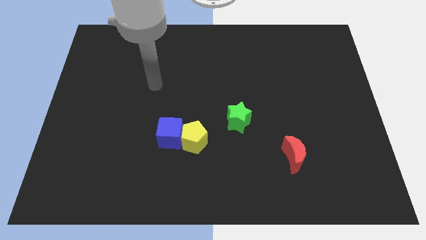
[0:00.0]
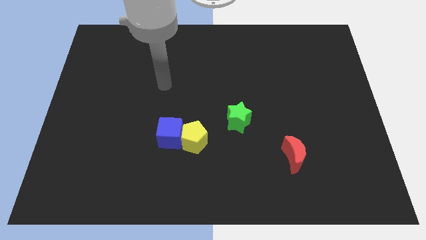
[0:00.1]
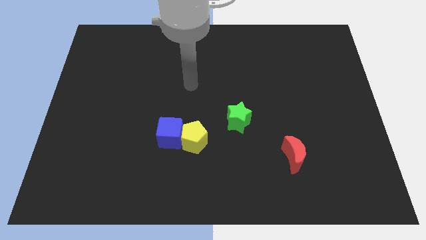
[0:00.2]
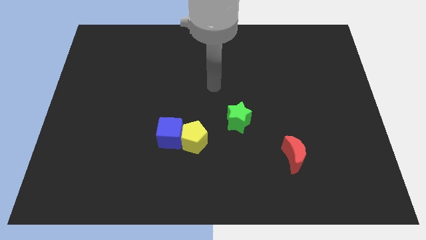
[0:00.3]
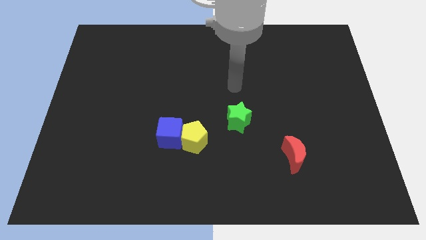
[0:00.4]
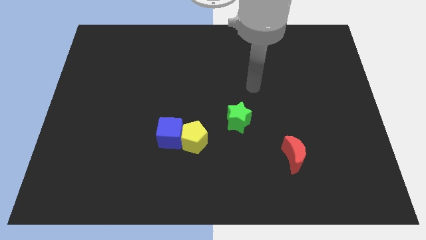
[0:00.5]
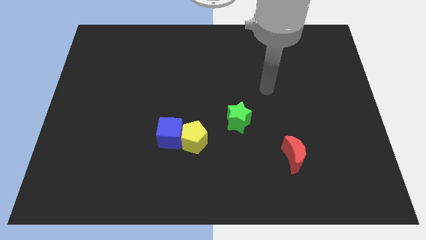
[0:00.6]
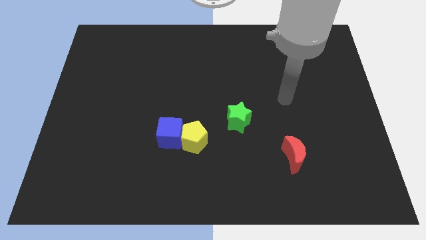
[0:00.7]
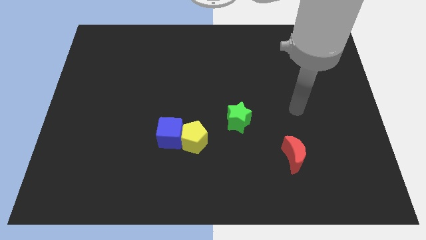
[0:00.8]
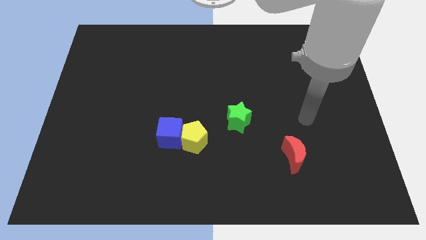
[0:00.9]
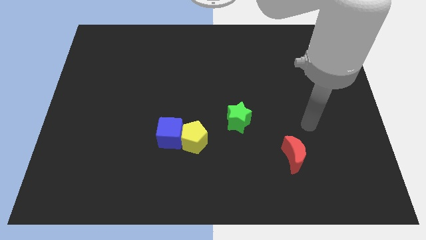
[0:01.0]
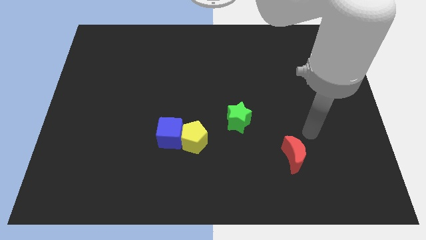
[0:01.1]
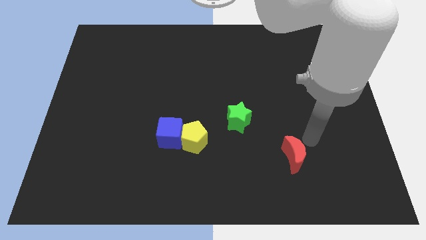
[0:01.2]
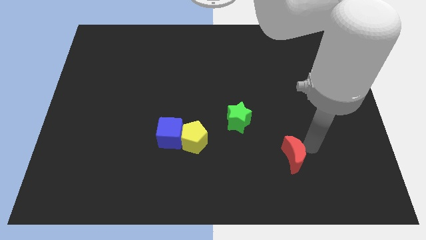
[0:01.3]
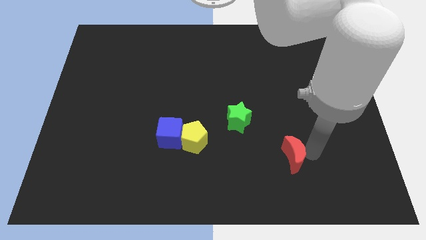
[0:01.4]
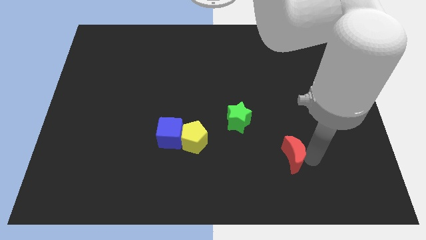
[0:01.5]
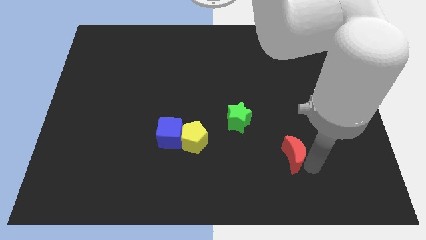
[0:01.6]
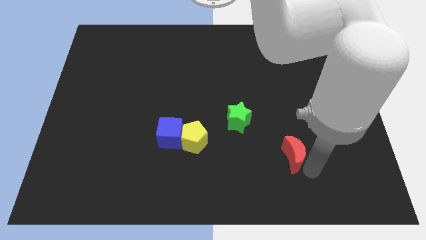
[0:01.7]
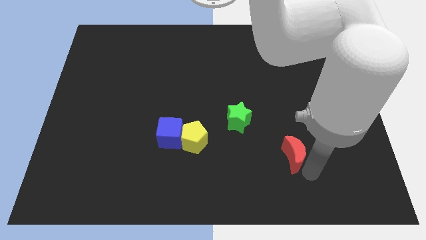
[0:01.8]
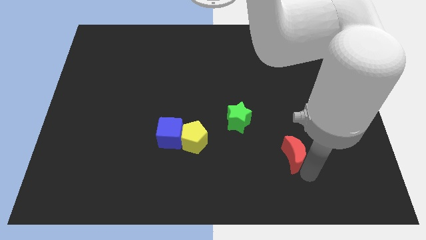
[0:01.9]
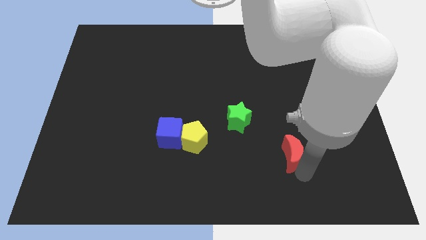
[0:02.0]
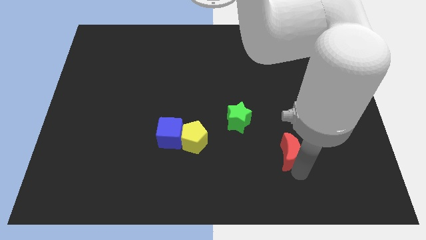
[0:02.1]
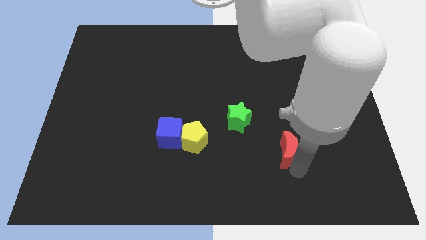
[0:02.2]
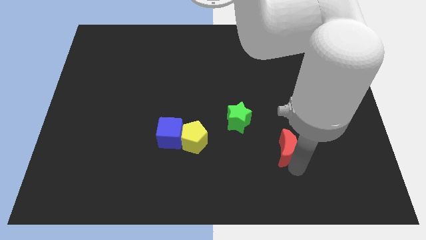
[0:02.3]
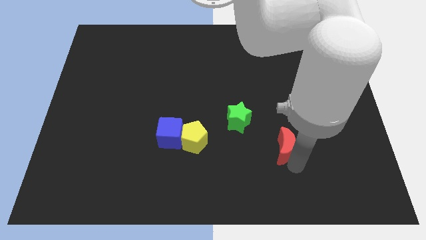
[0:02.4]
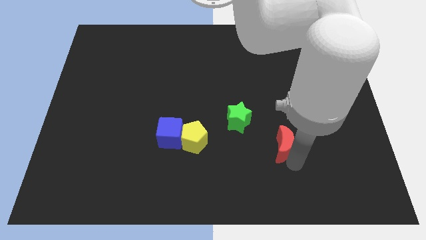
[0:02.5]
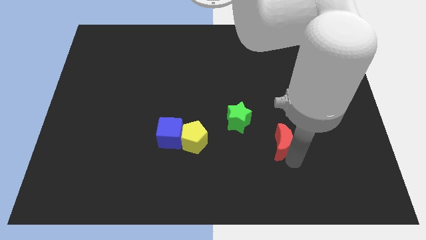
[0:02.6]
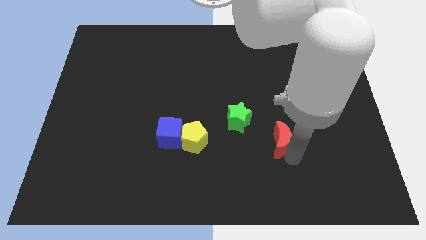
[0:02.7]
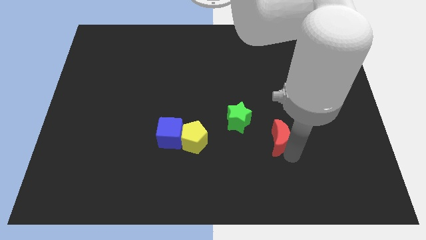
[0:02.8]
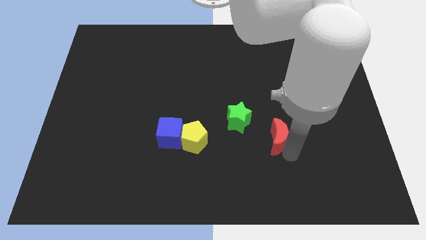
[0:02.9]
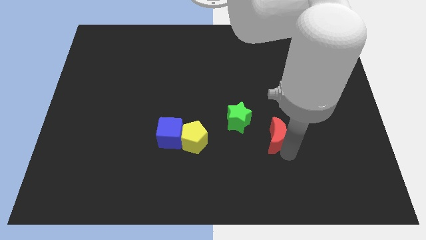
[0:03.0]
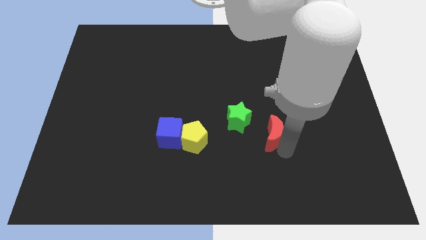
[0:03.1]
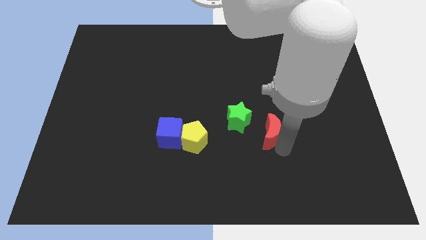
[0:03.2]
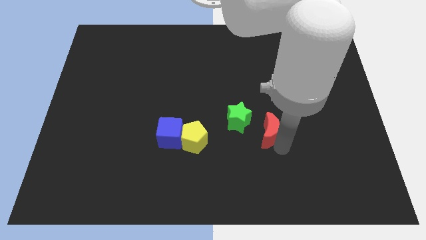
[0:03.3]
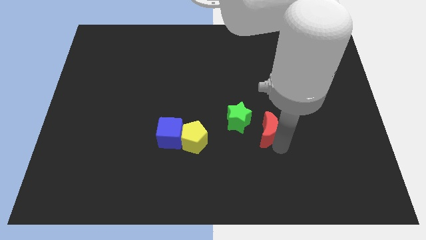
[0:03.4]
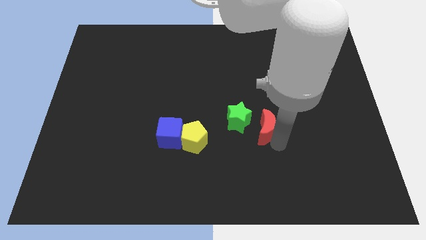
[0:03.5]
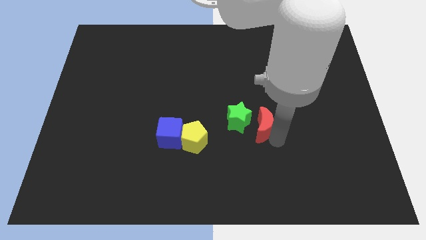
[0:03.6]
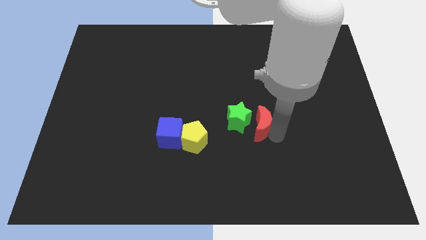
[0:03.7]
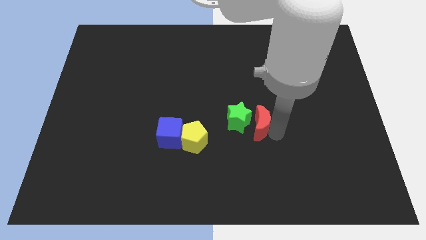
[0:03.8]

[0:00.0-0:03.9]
put the red block to the star

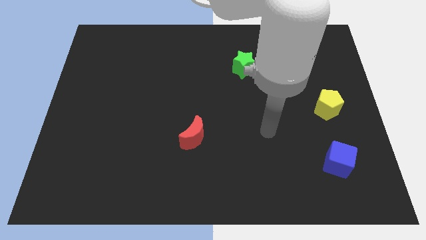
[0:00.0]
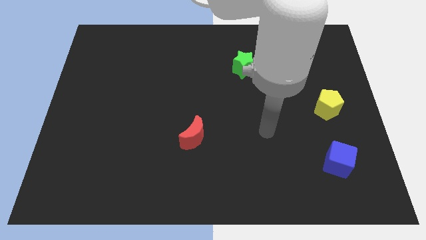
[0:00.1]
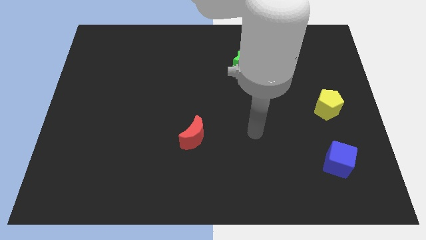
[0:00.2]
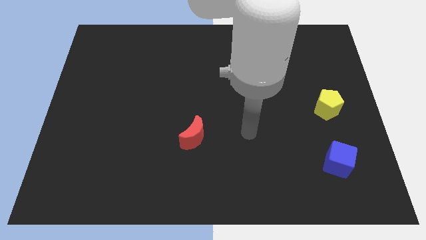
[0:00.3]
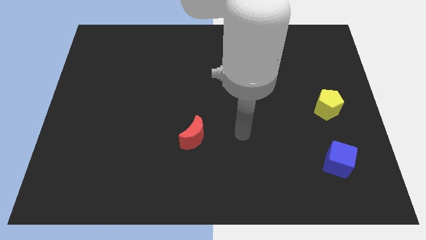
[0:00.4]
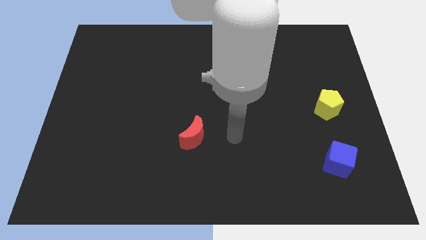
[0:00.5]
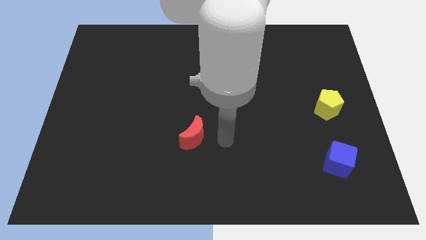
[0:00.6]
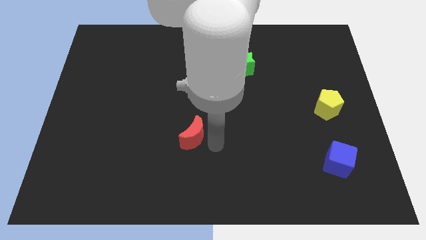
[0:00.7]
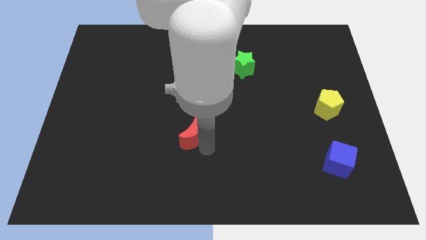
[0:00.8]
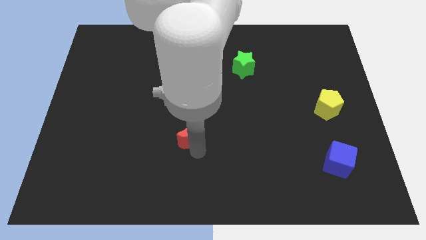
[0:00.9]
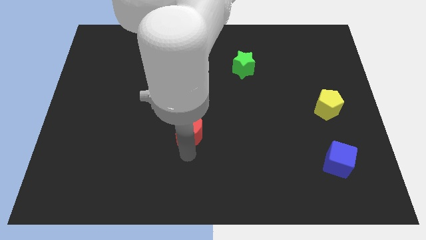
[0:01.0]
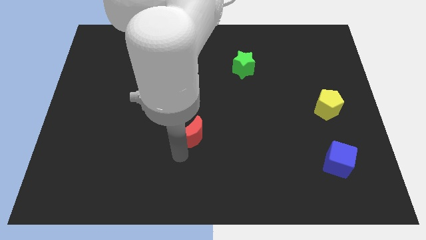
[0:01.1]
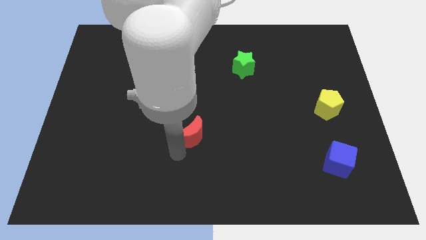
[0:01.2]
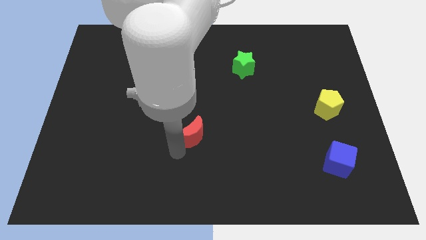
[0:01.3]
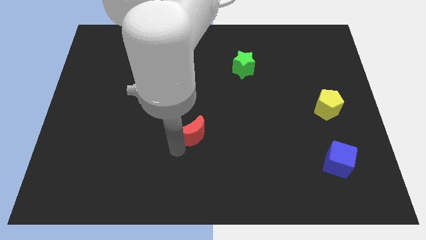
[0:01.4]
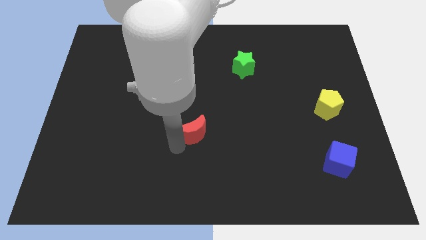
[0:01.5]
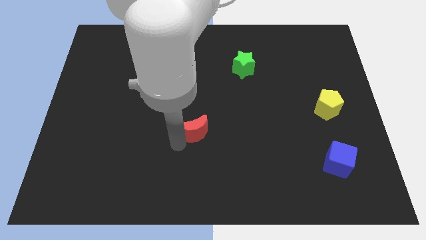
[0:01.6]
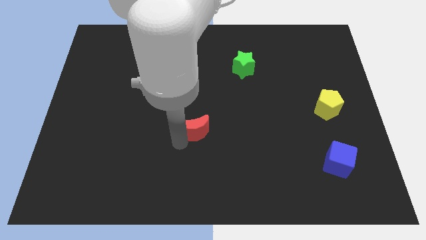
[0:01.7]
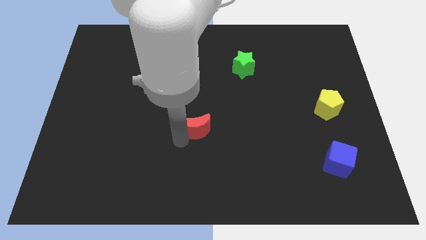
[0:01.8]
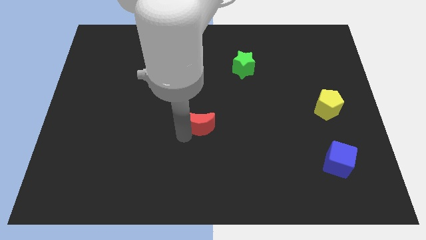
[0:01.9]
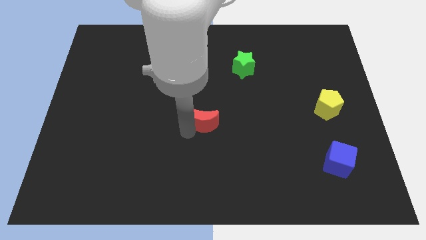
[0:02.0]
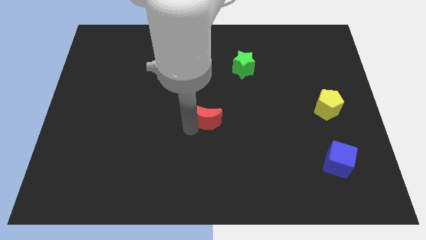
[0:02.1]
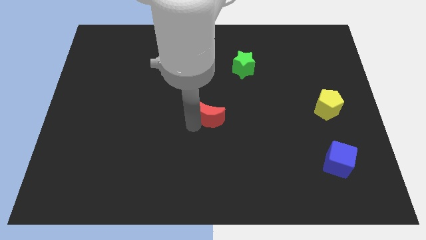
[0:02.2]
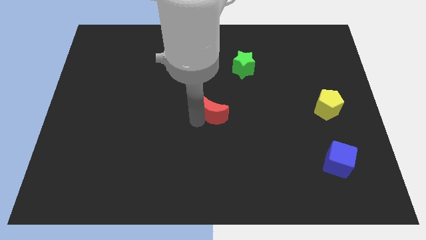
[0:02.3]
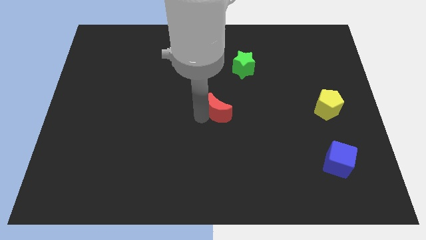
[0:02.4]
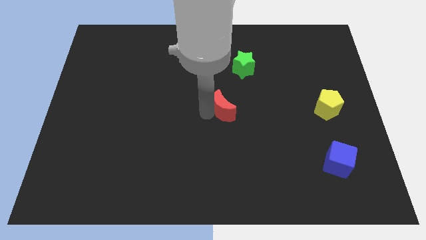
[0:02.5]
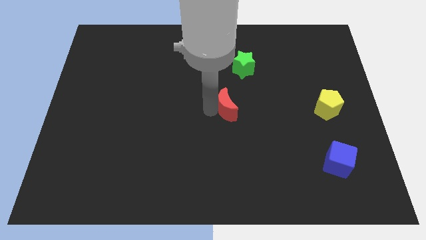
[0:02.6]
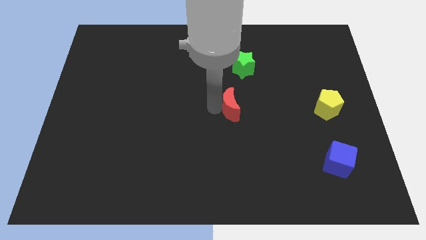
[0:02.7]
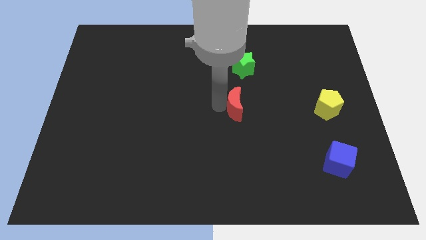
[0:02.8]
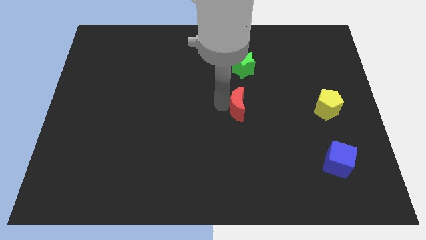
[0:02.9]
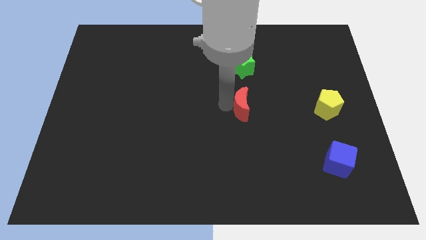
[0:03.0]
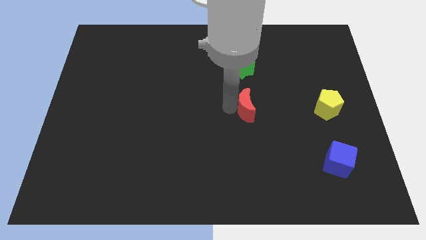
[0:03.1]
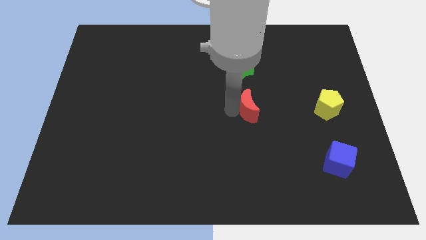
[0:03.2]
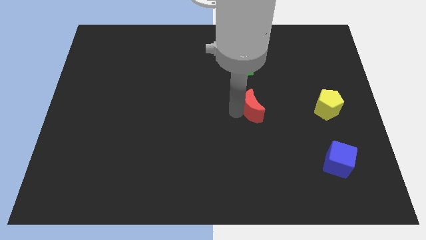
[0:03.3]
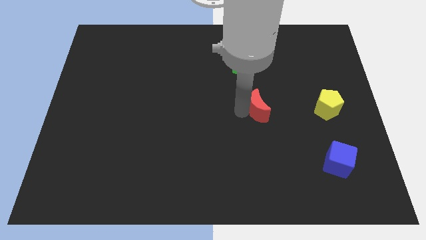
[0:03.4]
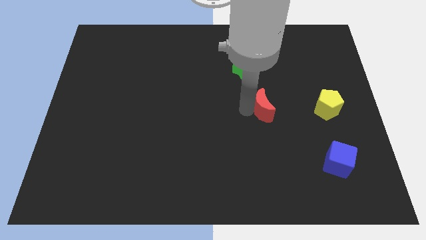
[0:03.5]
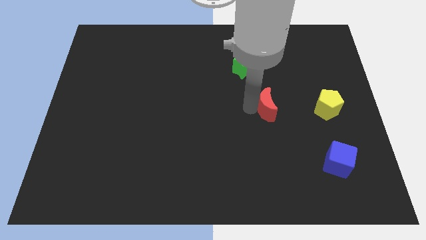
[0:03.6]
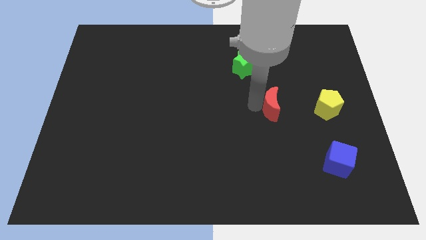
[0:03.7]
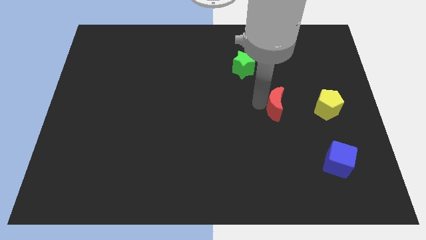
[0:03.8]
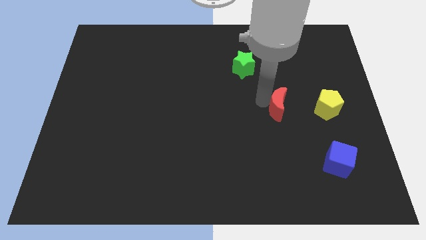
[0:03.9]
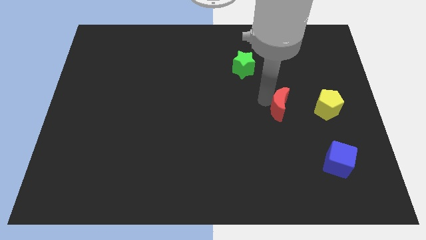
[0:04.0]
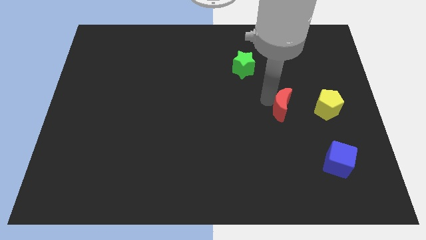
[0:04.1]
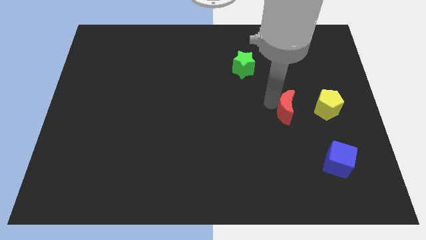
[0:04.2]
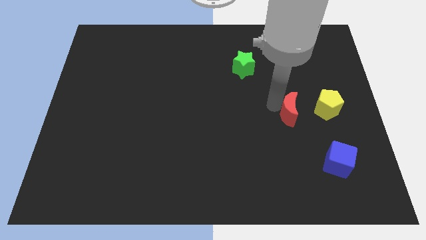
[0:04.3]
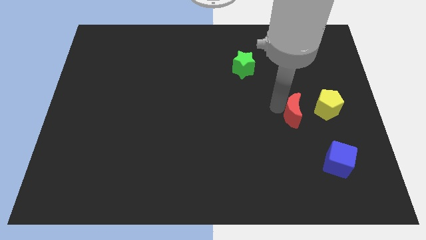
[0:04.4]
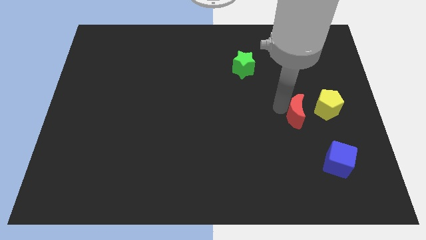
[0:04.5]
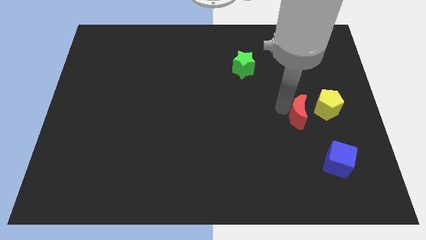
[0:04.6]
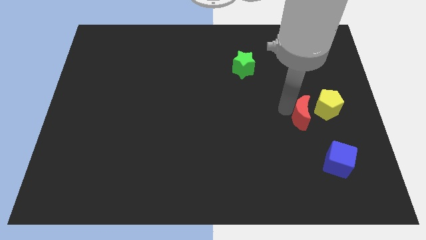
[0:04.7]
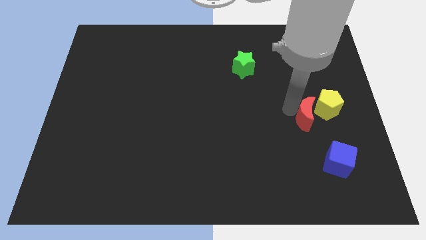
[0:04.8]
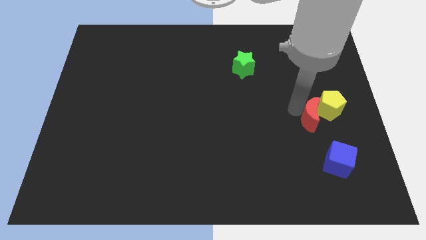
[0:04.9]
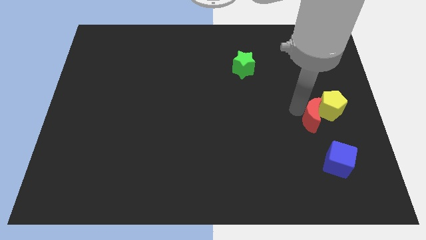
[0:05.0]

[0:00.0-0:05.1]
push the red block next to the yellow pentagon
